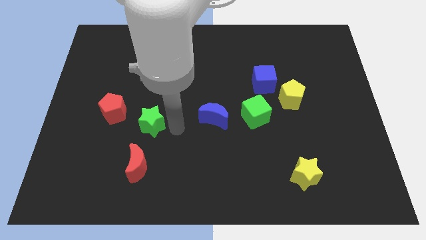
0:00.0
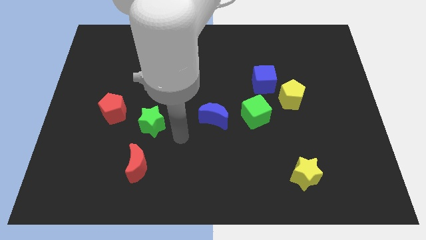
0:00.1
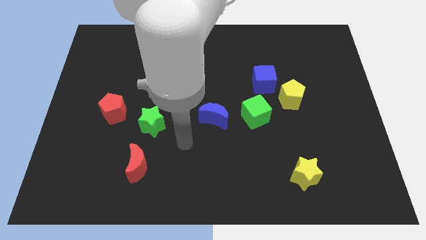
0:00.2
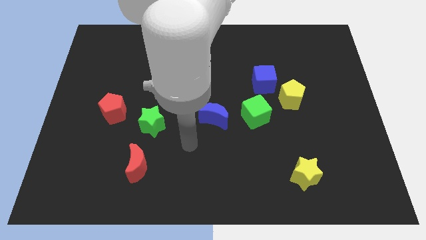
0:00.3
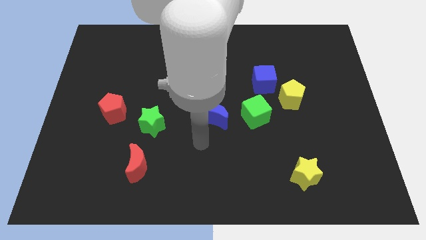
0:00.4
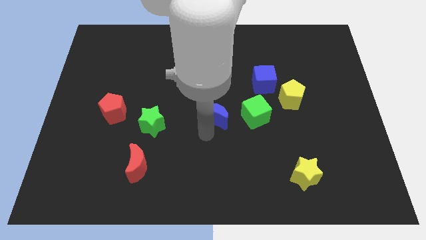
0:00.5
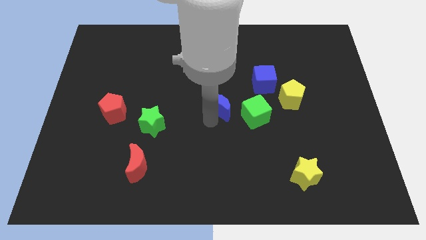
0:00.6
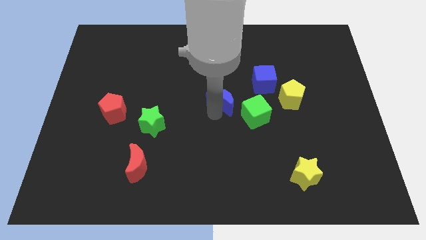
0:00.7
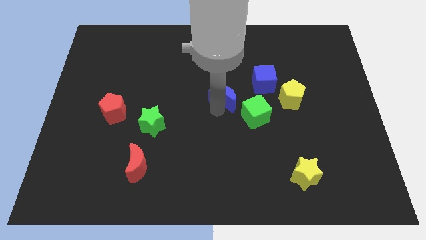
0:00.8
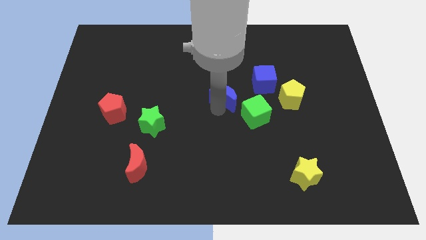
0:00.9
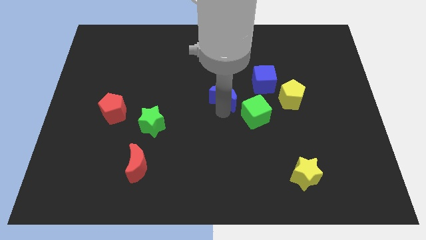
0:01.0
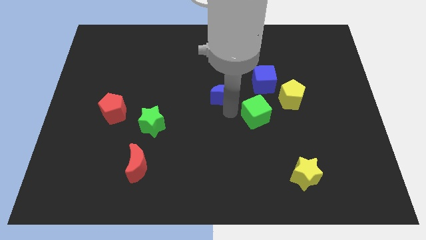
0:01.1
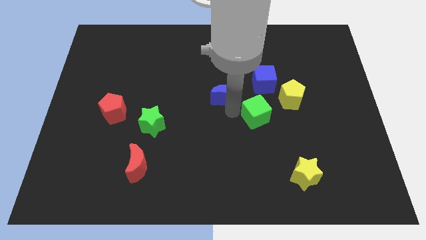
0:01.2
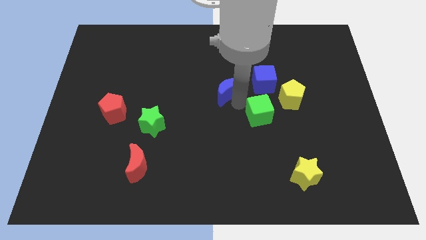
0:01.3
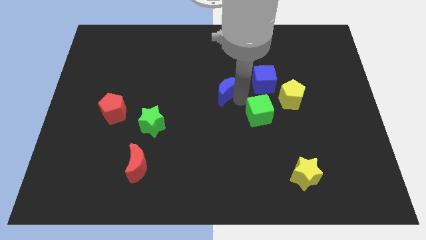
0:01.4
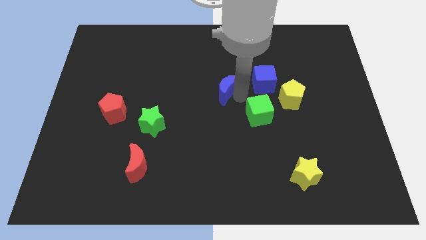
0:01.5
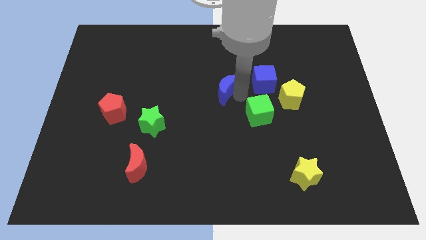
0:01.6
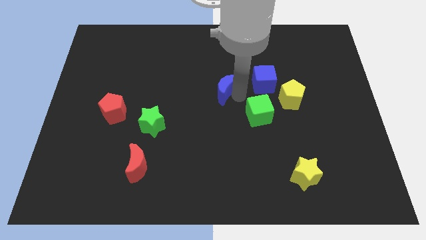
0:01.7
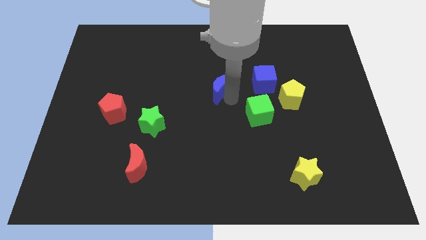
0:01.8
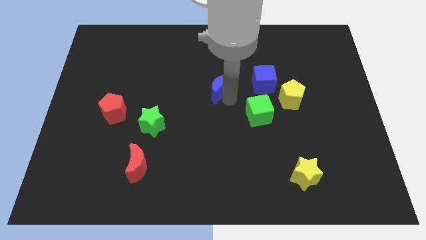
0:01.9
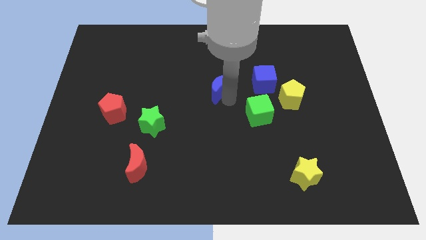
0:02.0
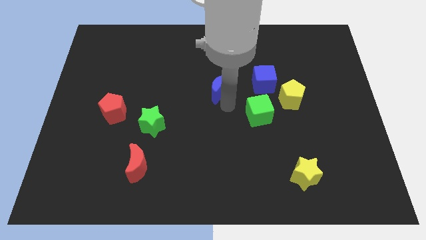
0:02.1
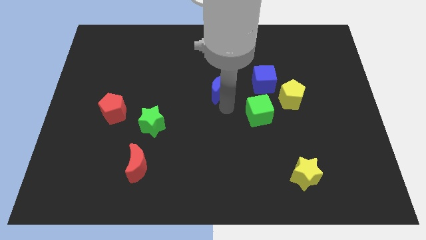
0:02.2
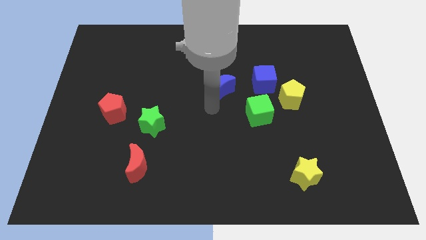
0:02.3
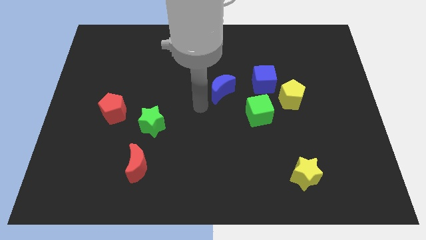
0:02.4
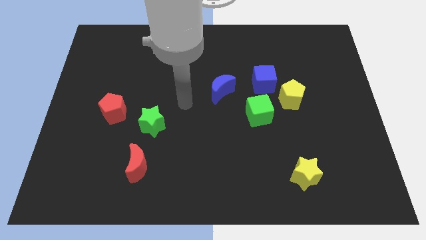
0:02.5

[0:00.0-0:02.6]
move the blue moon to the left side of the blue cube

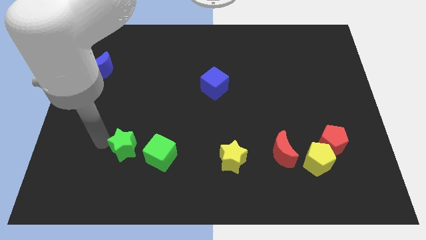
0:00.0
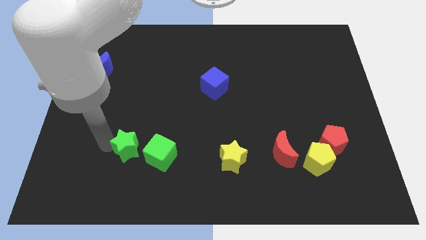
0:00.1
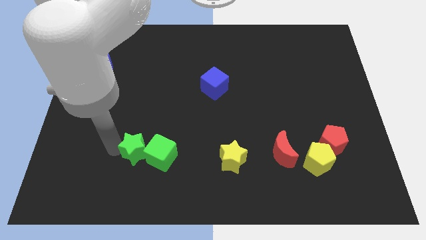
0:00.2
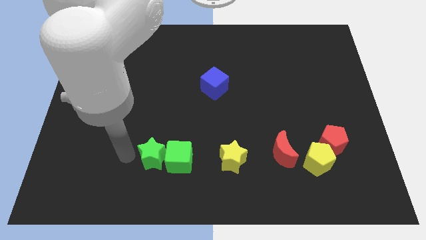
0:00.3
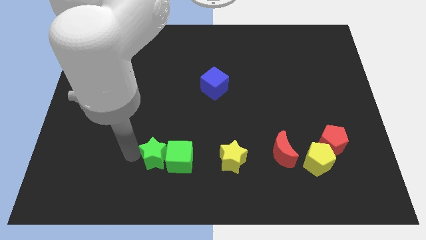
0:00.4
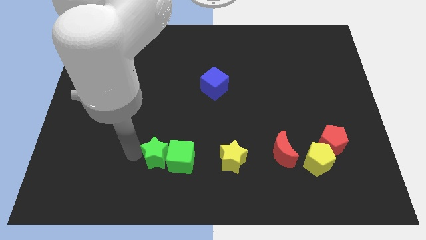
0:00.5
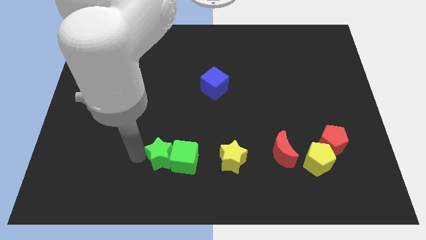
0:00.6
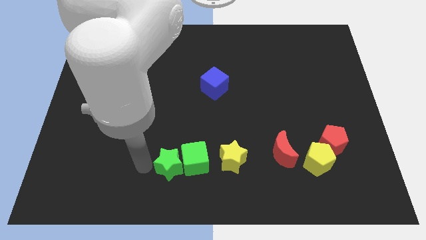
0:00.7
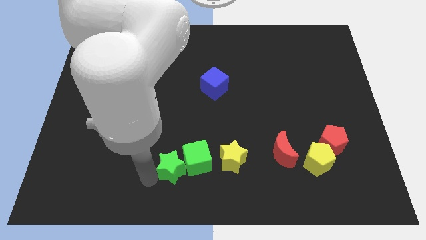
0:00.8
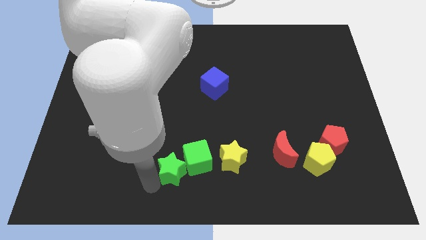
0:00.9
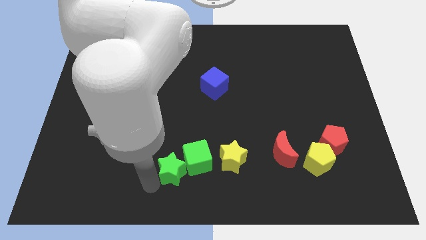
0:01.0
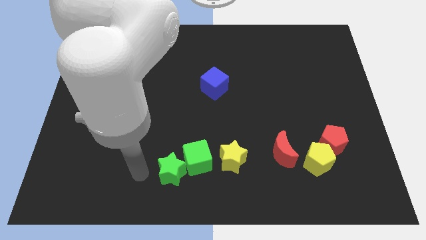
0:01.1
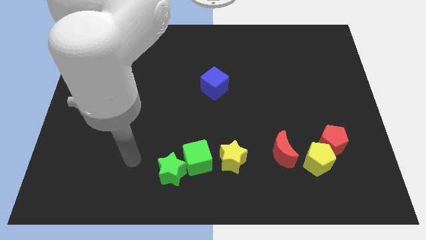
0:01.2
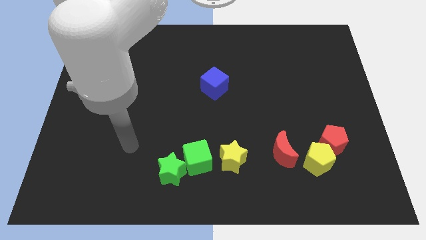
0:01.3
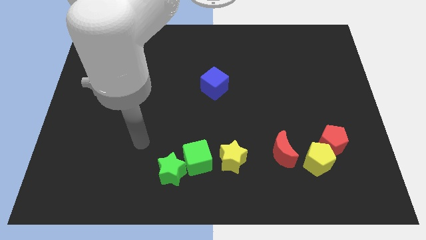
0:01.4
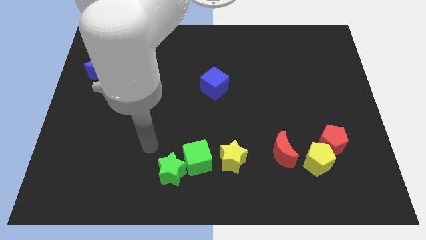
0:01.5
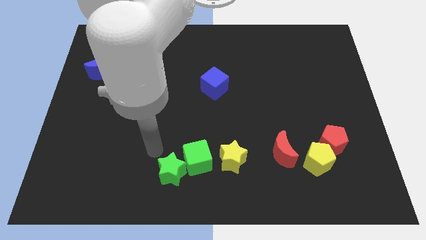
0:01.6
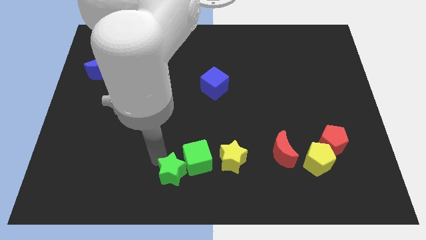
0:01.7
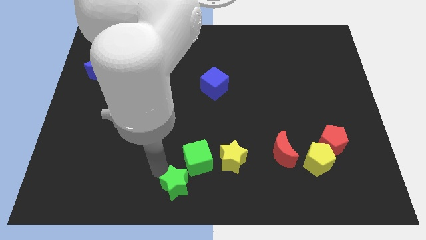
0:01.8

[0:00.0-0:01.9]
push the green star into the green cube

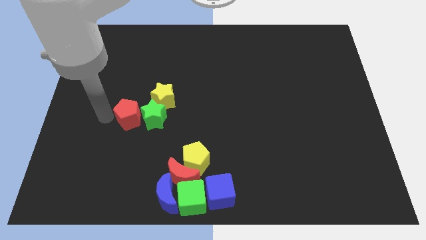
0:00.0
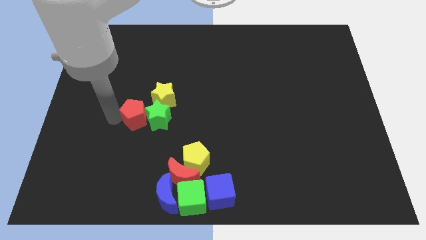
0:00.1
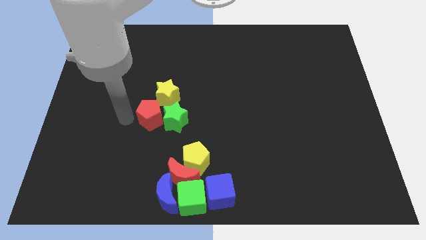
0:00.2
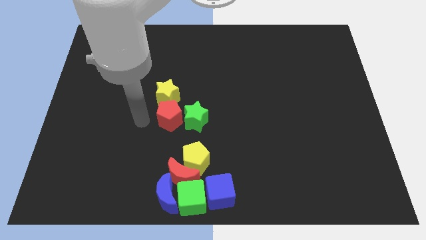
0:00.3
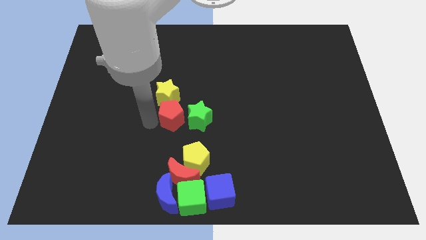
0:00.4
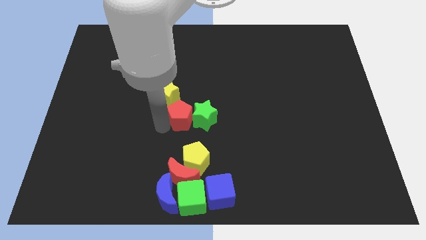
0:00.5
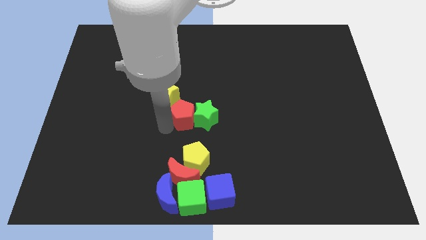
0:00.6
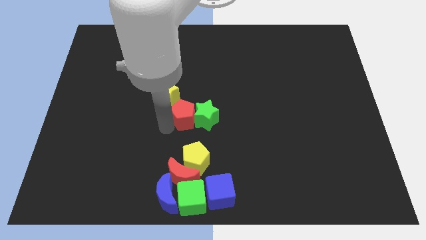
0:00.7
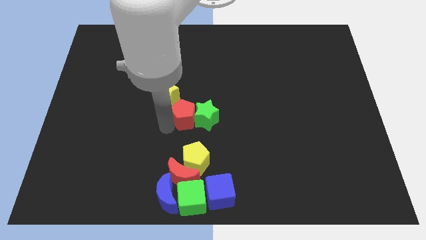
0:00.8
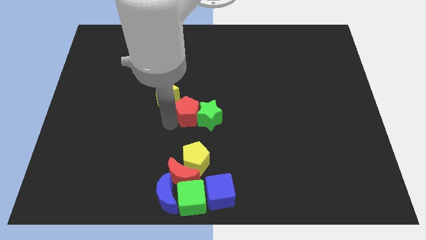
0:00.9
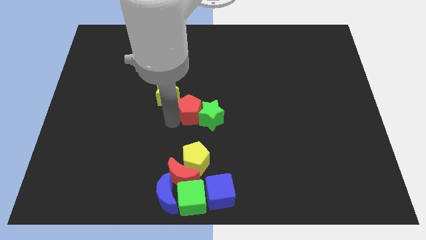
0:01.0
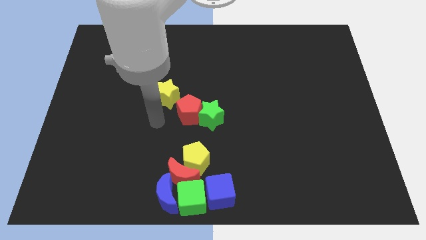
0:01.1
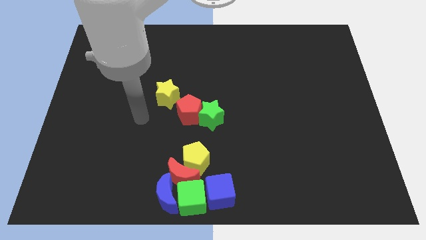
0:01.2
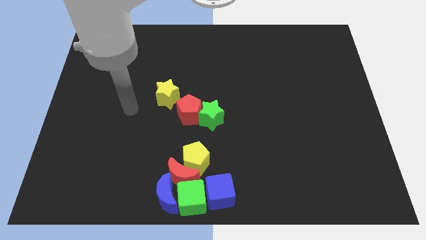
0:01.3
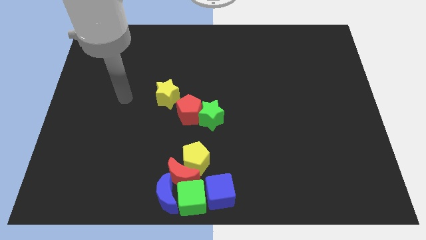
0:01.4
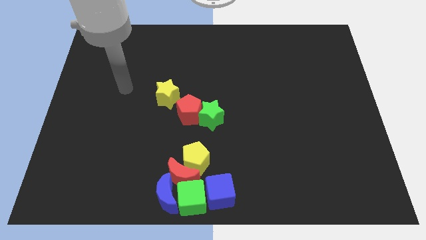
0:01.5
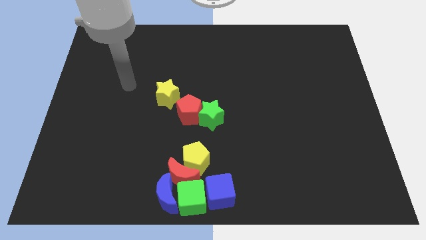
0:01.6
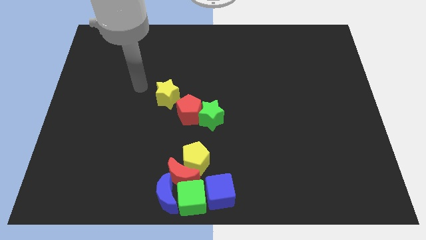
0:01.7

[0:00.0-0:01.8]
place the red pentagon and green star diagonally on the bottom right side of the yellow star

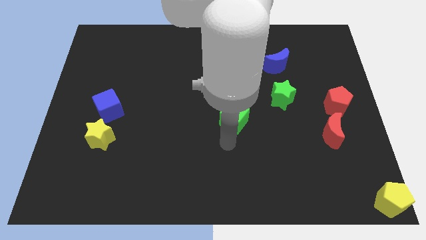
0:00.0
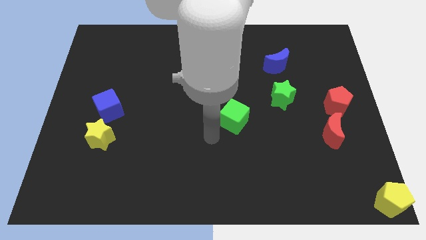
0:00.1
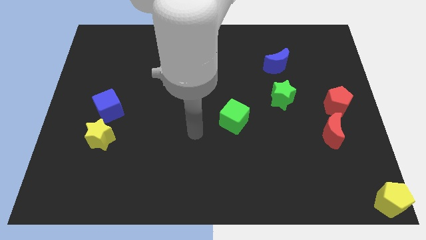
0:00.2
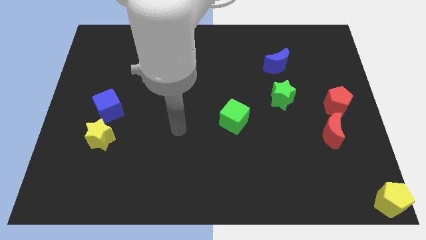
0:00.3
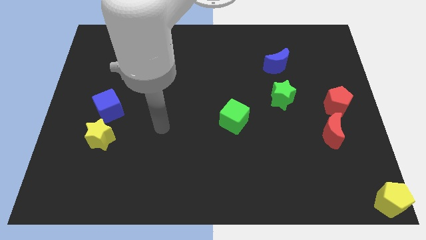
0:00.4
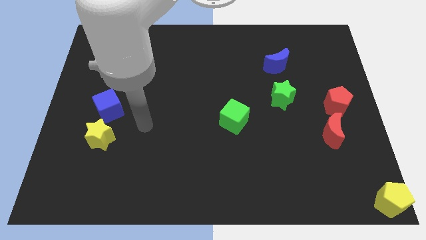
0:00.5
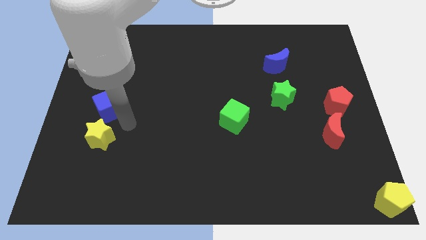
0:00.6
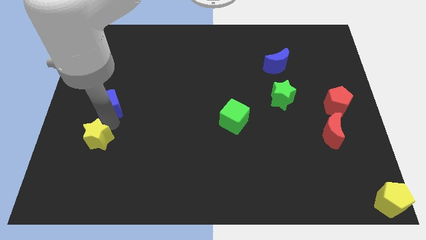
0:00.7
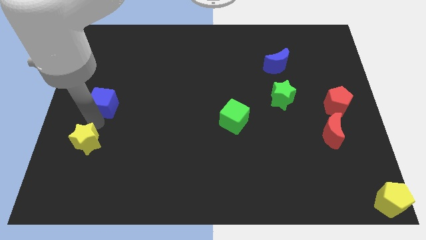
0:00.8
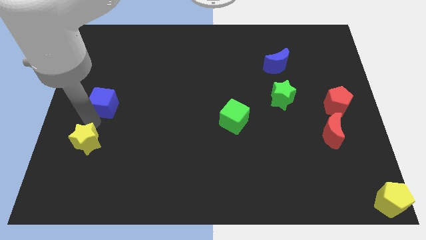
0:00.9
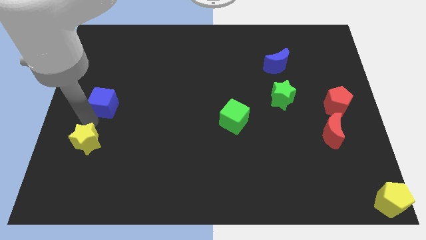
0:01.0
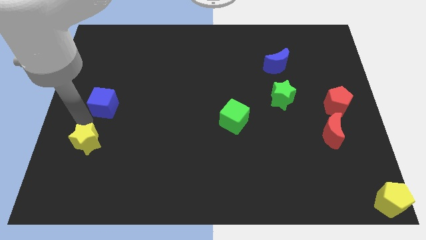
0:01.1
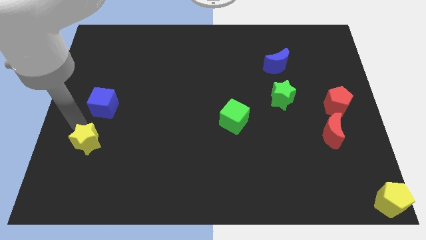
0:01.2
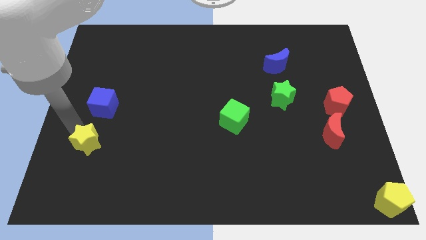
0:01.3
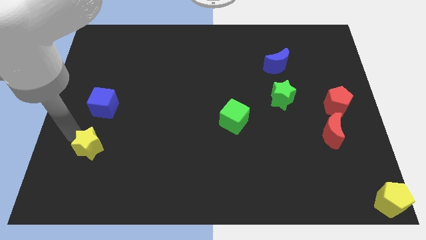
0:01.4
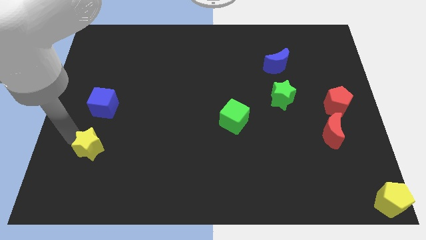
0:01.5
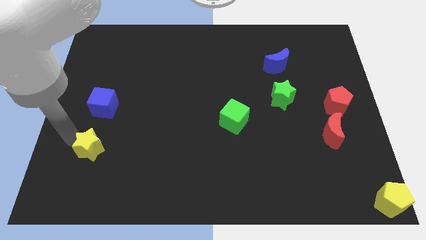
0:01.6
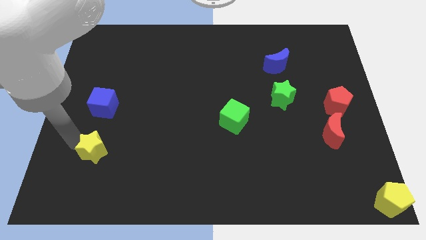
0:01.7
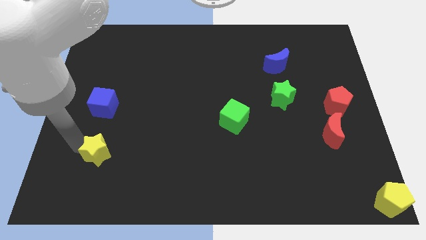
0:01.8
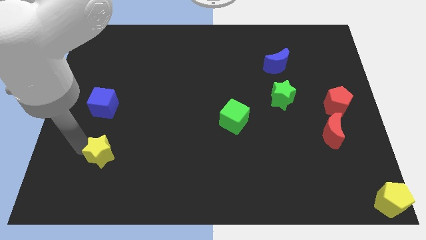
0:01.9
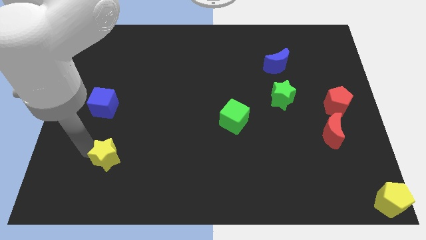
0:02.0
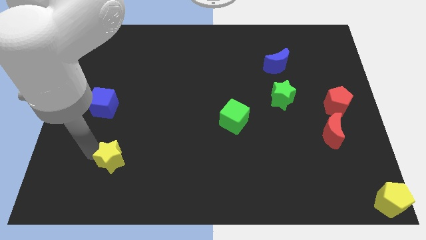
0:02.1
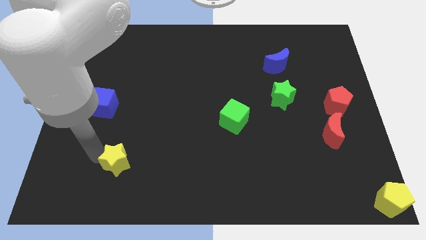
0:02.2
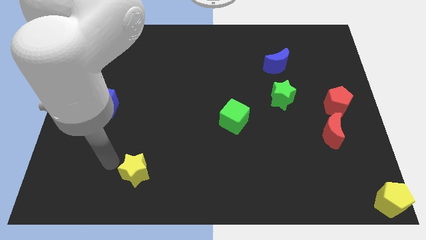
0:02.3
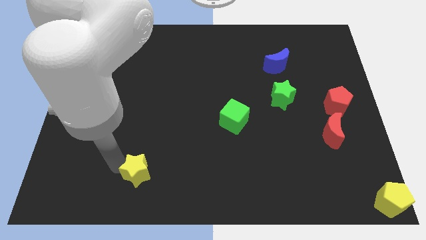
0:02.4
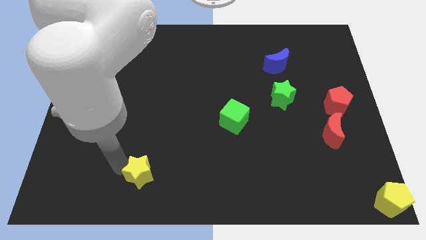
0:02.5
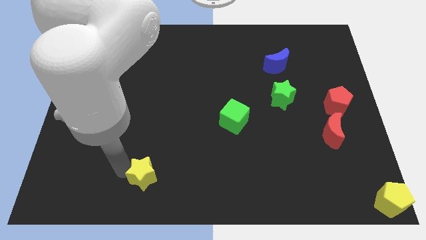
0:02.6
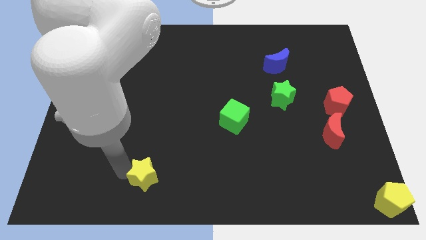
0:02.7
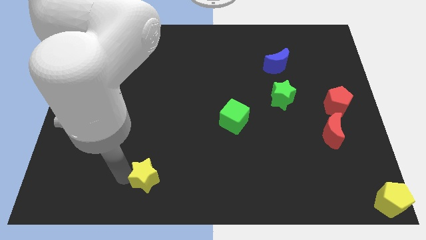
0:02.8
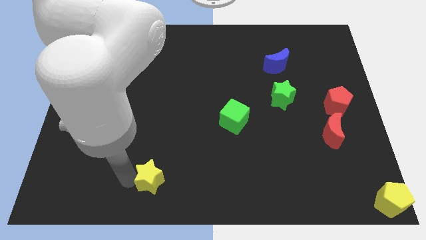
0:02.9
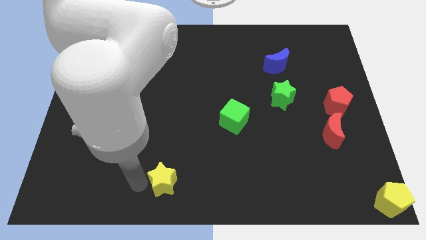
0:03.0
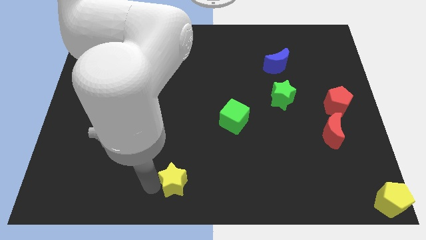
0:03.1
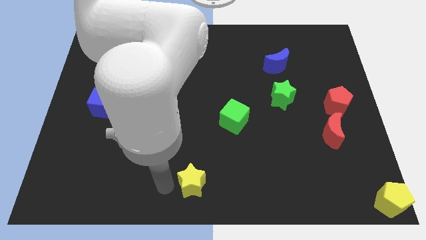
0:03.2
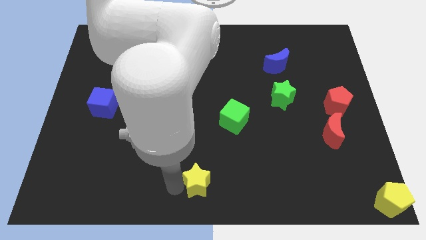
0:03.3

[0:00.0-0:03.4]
separate the yellow star from the blue cube
